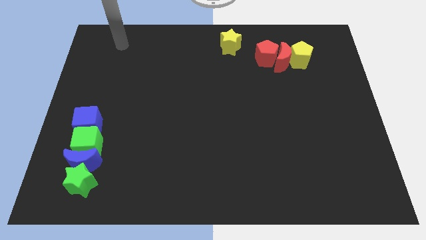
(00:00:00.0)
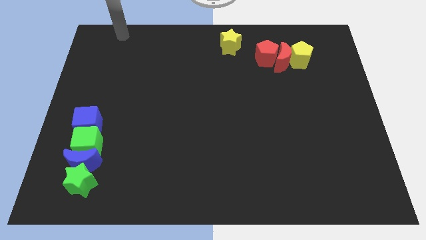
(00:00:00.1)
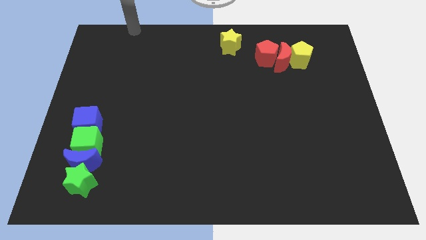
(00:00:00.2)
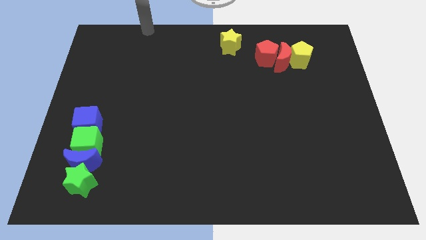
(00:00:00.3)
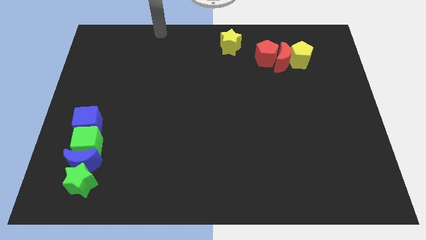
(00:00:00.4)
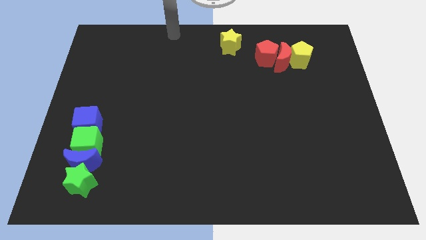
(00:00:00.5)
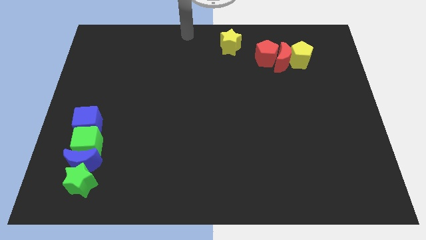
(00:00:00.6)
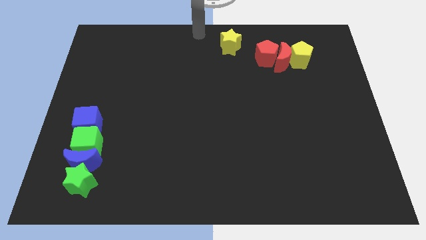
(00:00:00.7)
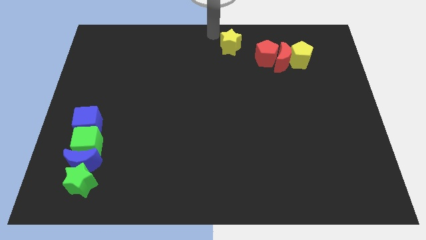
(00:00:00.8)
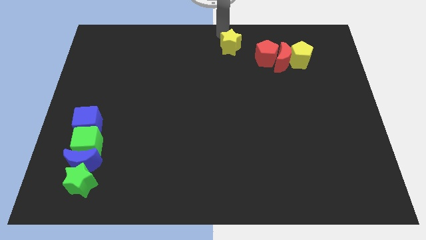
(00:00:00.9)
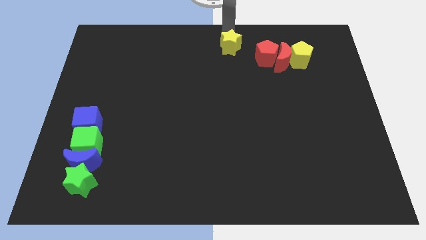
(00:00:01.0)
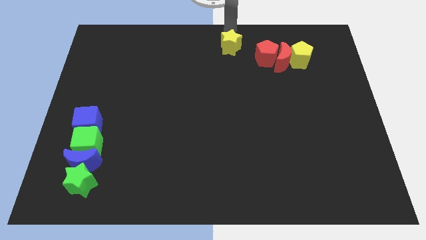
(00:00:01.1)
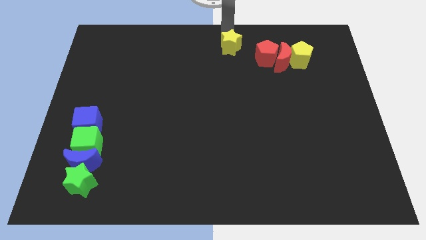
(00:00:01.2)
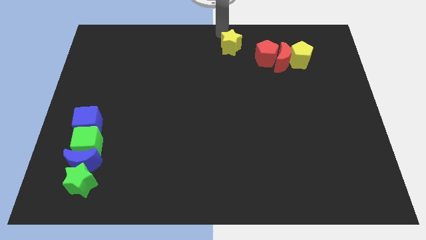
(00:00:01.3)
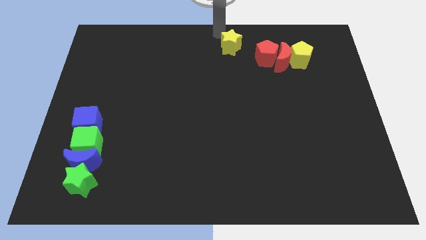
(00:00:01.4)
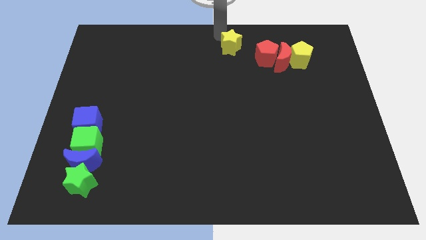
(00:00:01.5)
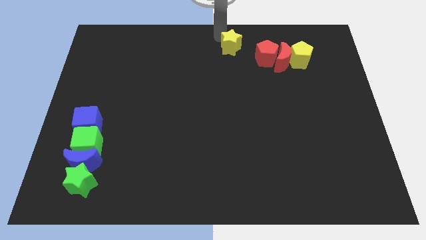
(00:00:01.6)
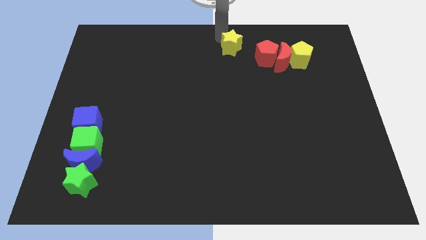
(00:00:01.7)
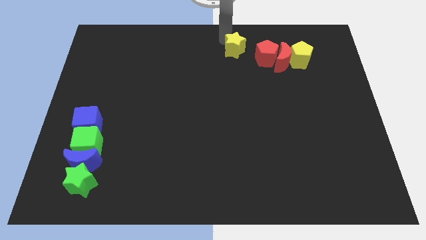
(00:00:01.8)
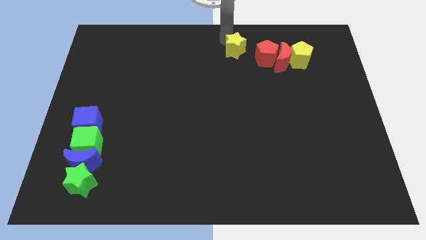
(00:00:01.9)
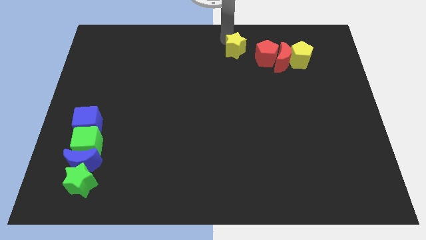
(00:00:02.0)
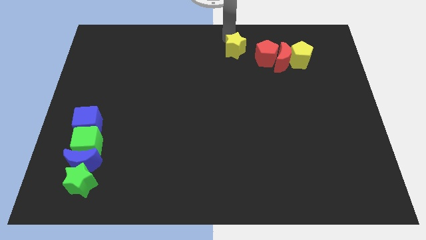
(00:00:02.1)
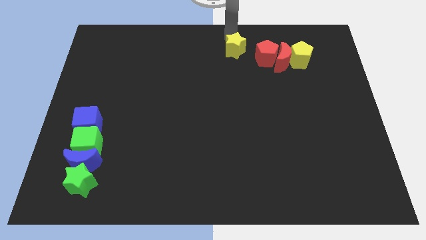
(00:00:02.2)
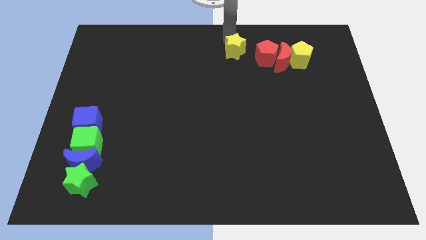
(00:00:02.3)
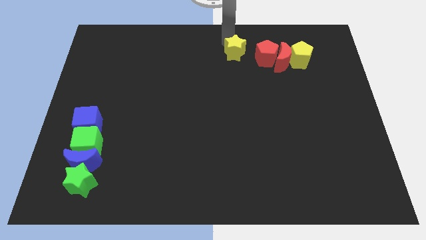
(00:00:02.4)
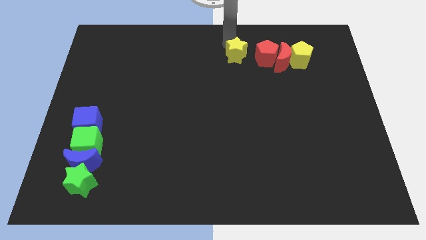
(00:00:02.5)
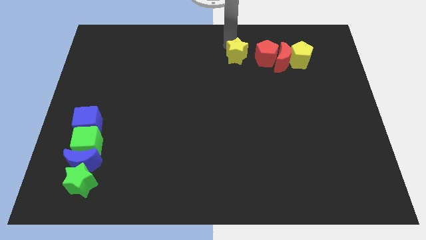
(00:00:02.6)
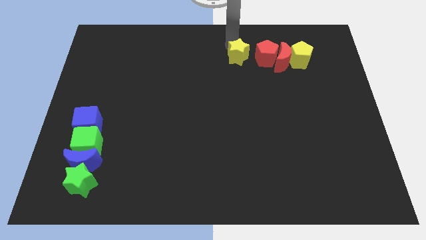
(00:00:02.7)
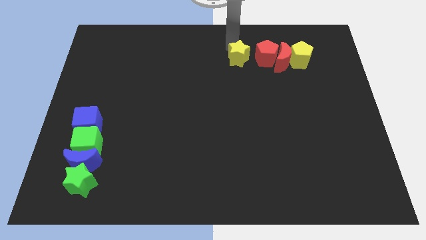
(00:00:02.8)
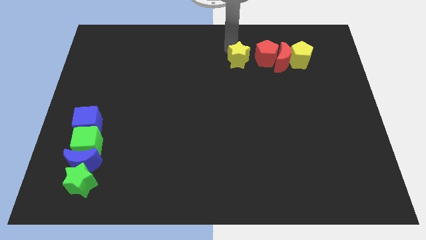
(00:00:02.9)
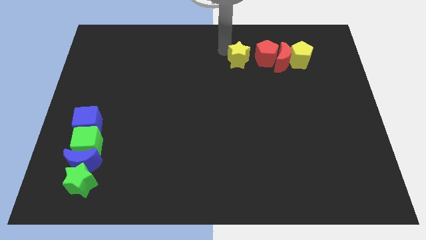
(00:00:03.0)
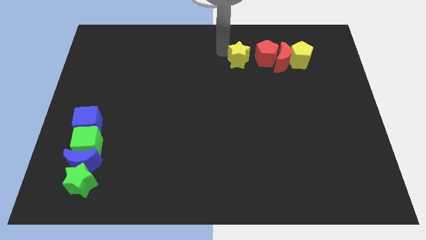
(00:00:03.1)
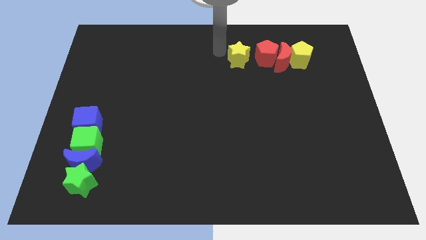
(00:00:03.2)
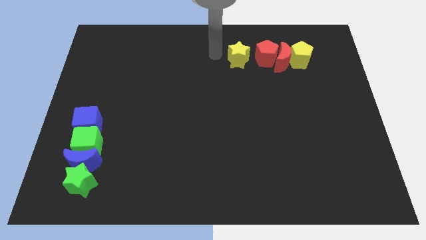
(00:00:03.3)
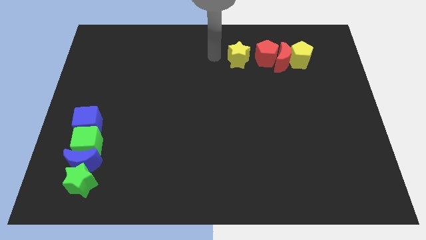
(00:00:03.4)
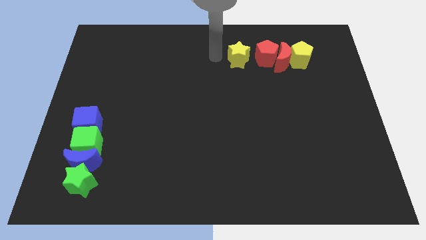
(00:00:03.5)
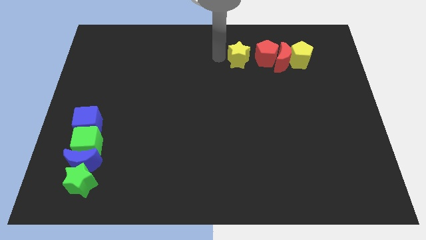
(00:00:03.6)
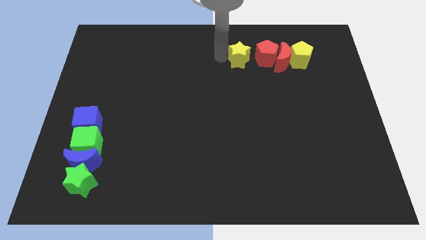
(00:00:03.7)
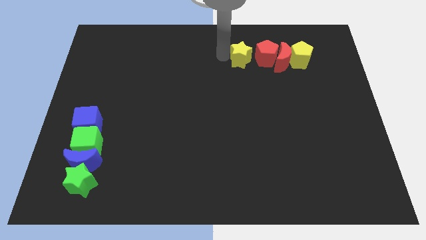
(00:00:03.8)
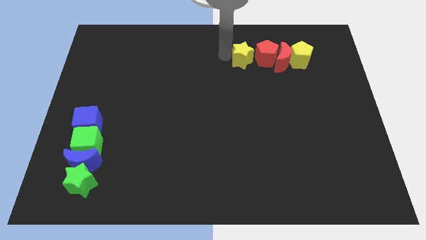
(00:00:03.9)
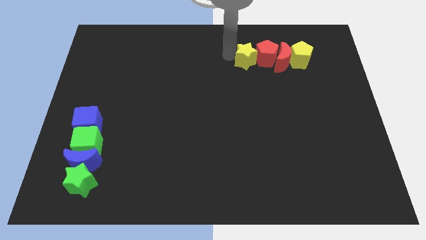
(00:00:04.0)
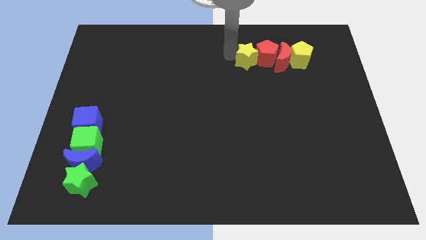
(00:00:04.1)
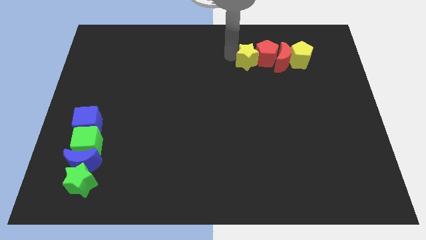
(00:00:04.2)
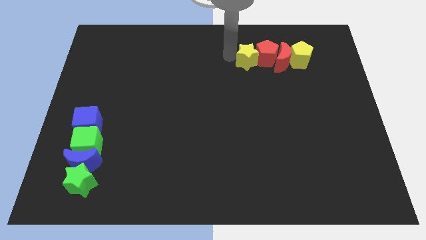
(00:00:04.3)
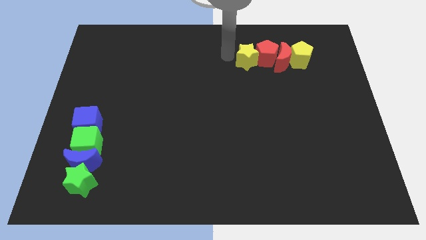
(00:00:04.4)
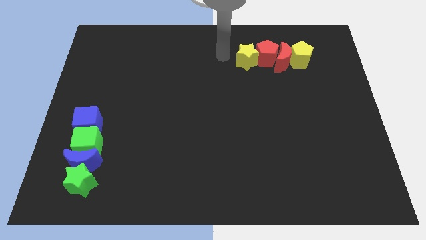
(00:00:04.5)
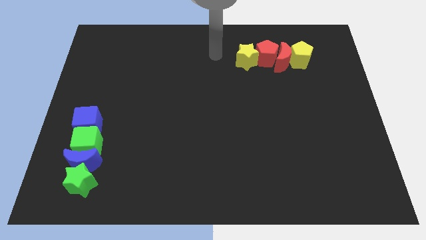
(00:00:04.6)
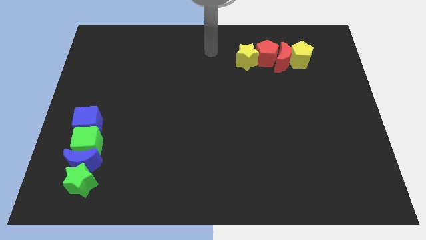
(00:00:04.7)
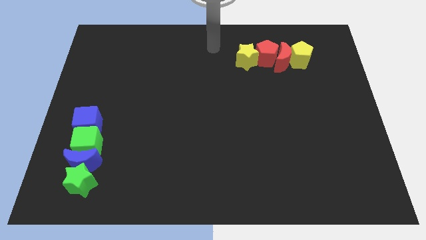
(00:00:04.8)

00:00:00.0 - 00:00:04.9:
push the yellow star left to the red pentagon

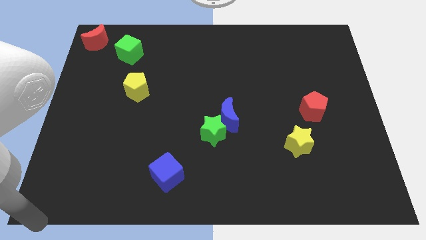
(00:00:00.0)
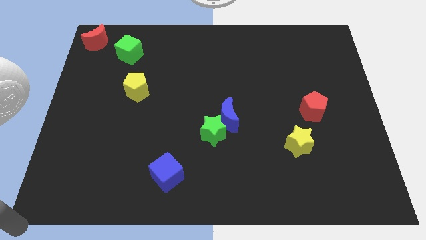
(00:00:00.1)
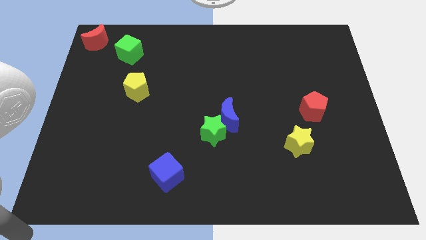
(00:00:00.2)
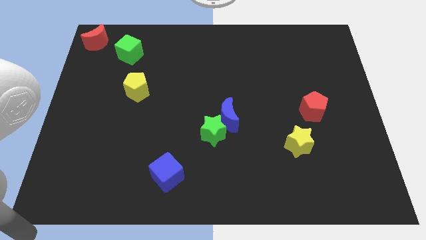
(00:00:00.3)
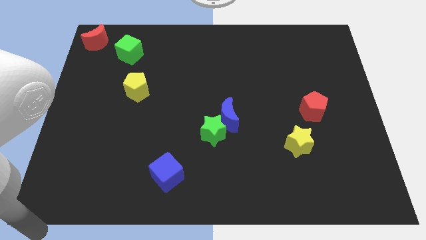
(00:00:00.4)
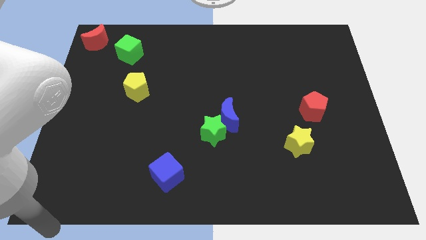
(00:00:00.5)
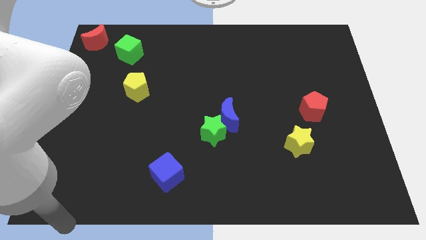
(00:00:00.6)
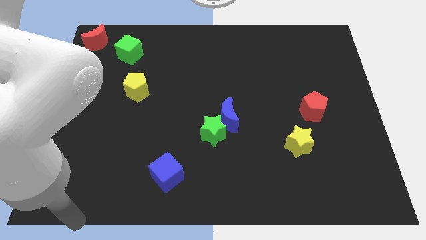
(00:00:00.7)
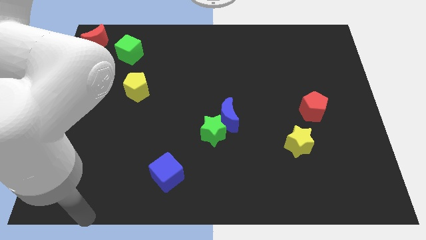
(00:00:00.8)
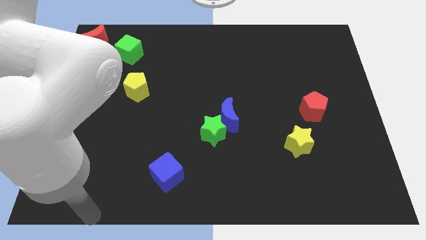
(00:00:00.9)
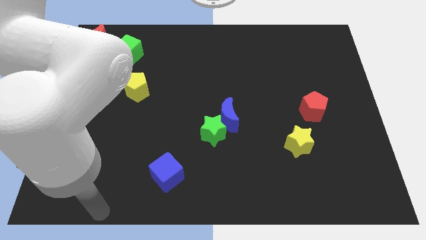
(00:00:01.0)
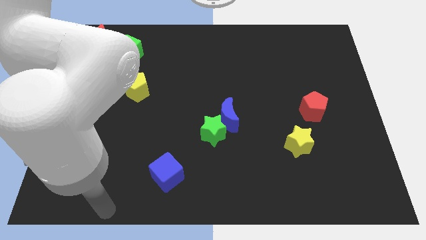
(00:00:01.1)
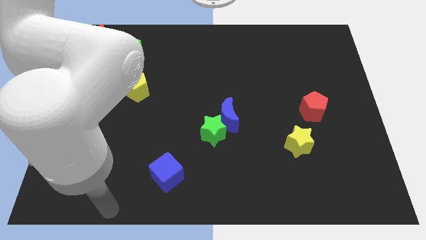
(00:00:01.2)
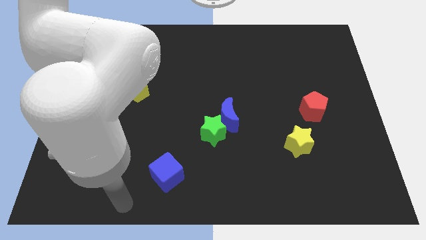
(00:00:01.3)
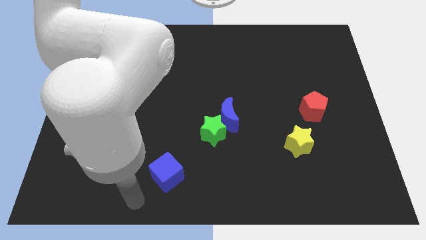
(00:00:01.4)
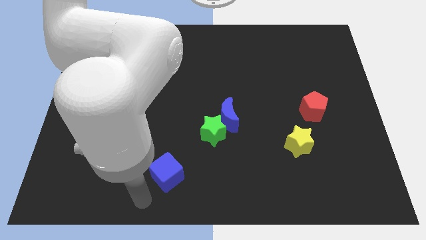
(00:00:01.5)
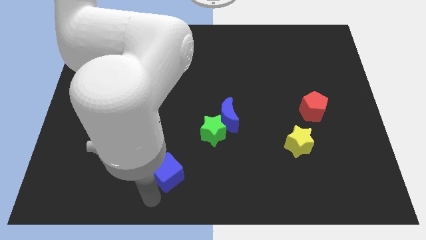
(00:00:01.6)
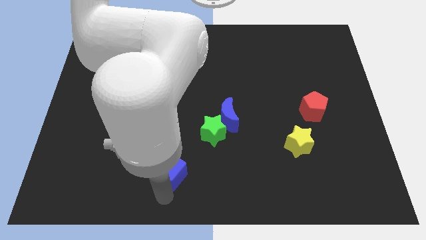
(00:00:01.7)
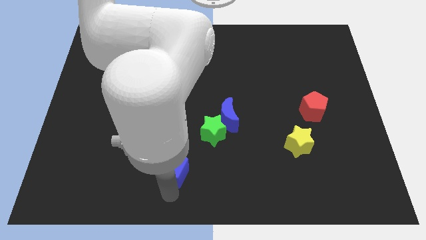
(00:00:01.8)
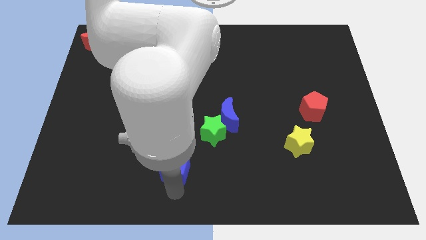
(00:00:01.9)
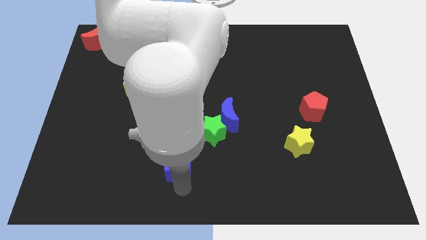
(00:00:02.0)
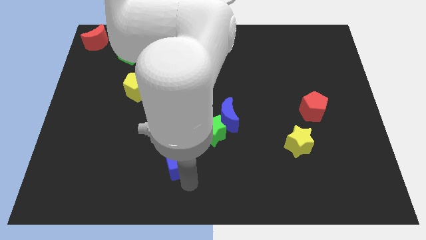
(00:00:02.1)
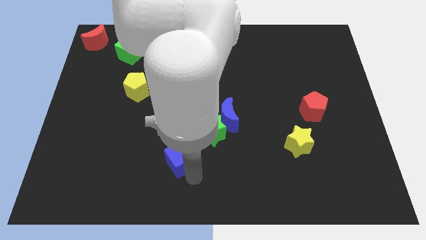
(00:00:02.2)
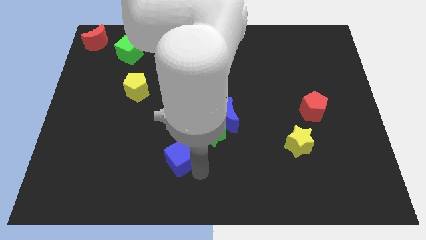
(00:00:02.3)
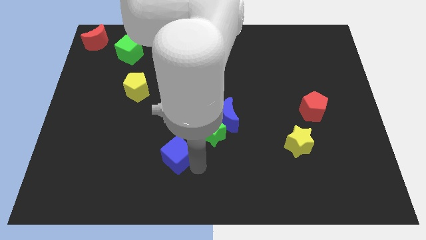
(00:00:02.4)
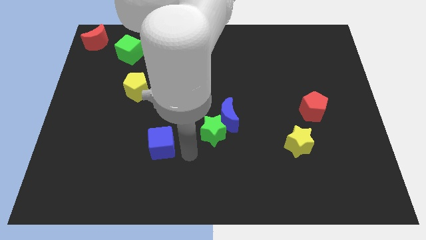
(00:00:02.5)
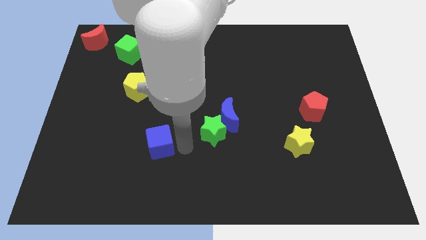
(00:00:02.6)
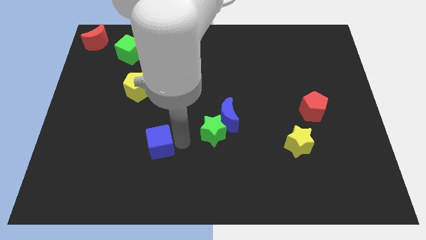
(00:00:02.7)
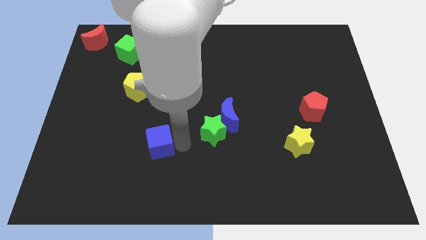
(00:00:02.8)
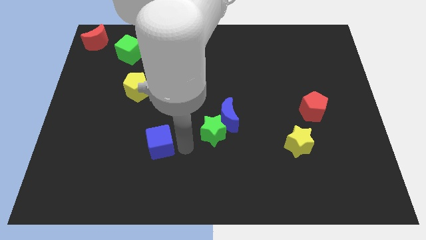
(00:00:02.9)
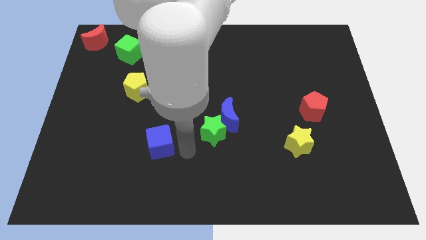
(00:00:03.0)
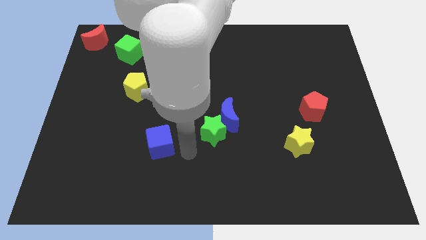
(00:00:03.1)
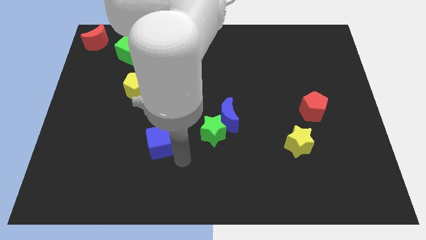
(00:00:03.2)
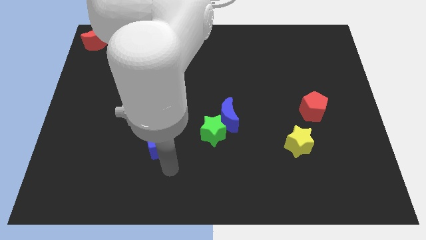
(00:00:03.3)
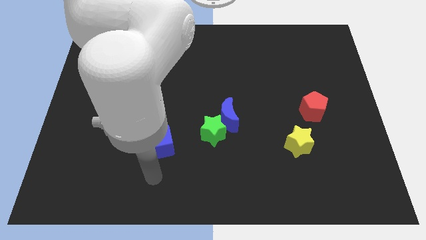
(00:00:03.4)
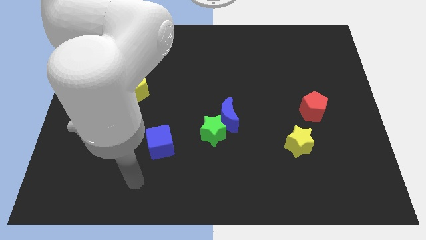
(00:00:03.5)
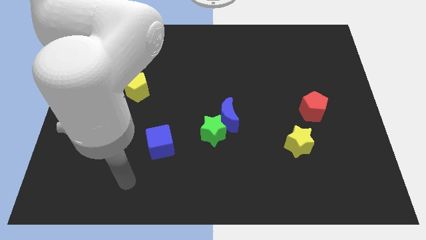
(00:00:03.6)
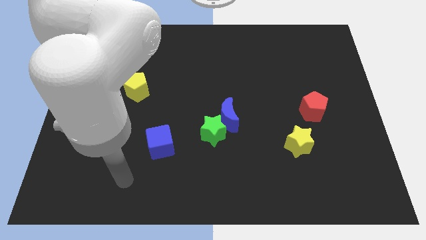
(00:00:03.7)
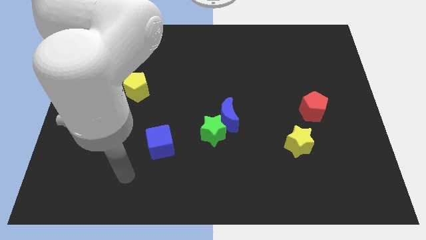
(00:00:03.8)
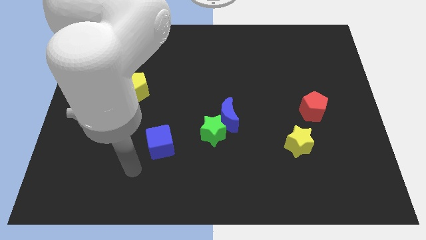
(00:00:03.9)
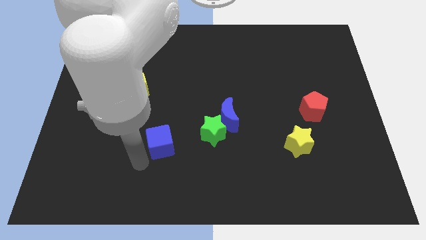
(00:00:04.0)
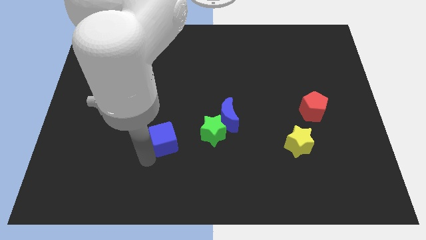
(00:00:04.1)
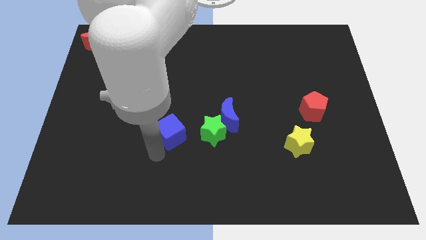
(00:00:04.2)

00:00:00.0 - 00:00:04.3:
slide the blue cube to the left side of the green star
